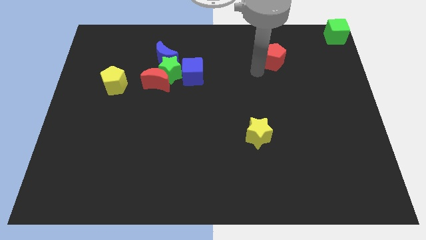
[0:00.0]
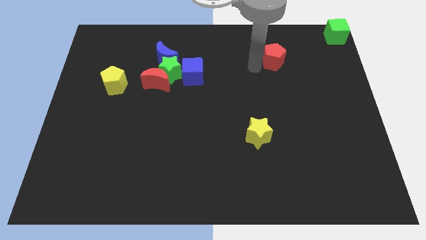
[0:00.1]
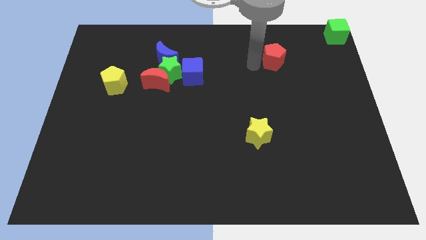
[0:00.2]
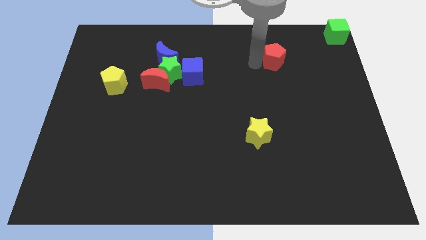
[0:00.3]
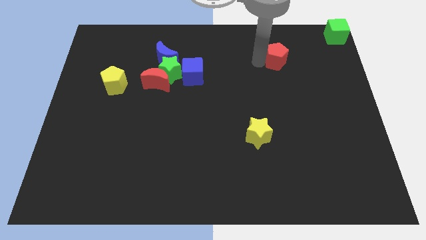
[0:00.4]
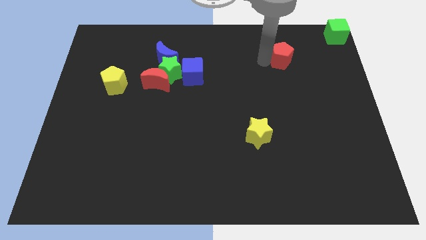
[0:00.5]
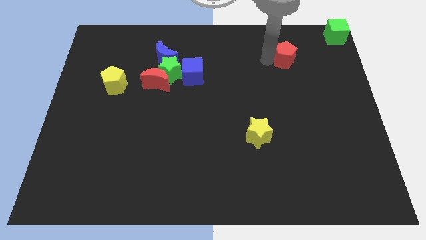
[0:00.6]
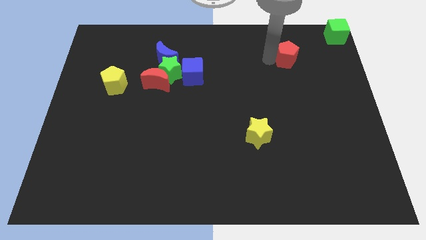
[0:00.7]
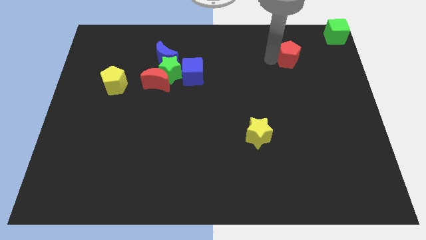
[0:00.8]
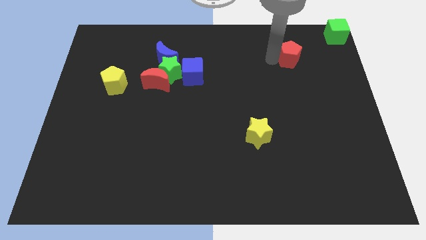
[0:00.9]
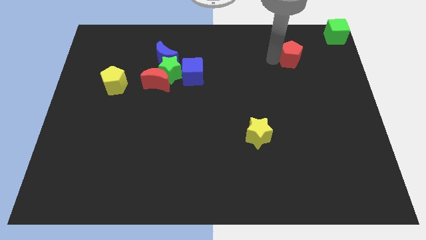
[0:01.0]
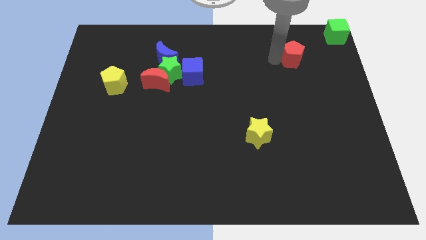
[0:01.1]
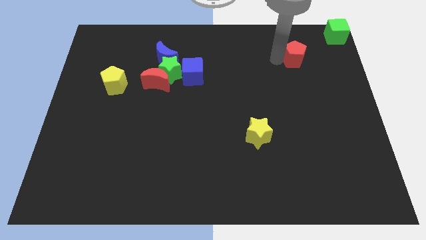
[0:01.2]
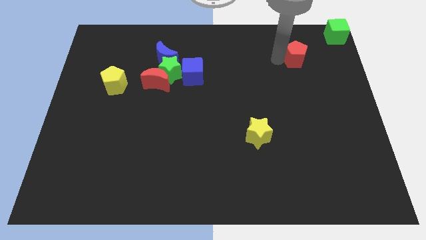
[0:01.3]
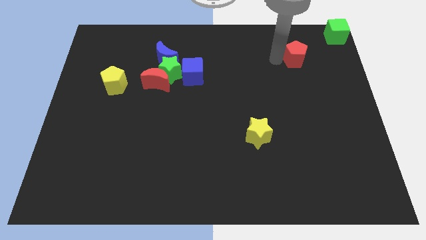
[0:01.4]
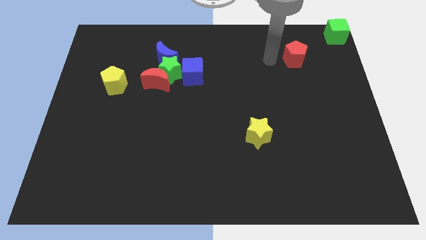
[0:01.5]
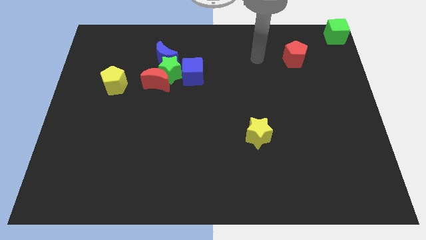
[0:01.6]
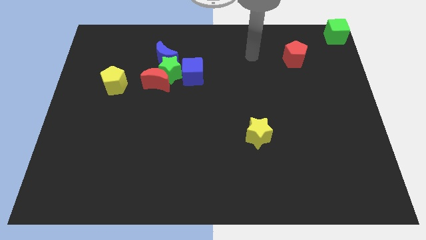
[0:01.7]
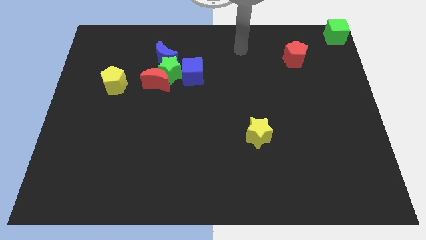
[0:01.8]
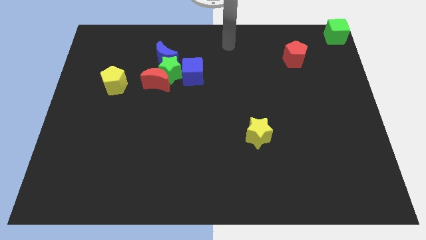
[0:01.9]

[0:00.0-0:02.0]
place the red pentagon diagonally to the green cube

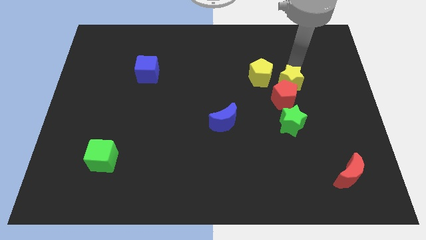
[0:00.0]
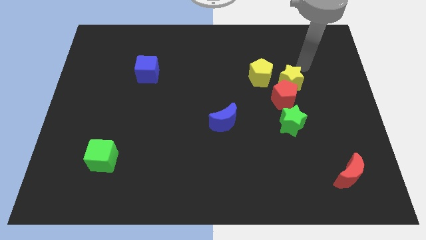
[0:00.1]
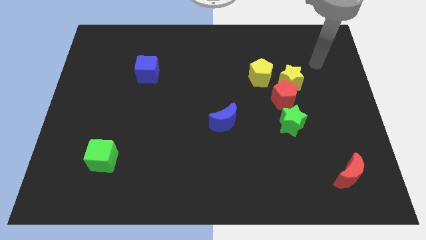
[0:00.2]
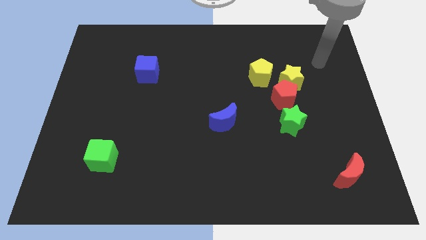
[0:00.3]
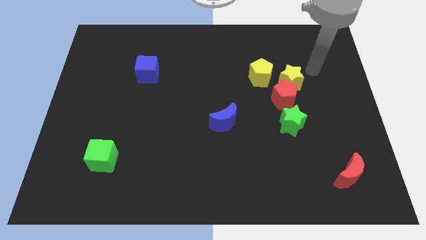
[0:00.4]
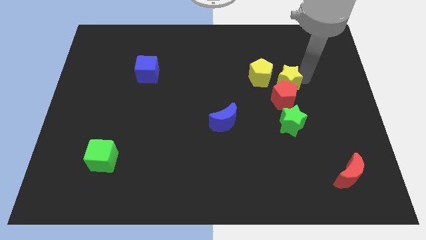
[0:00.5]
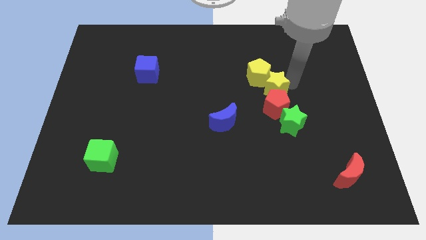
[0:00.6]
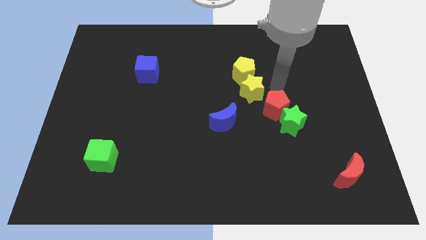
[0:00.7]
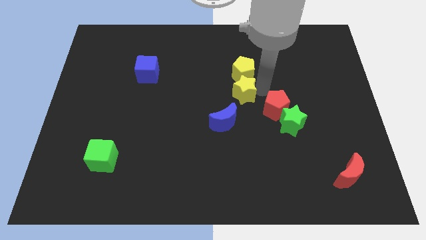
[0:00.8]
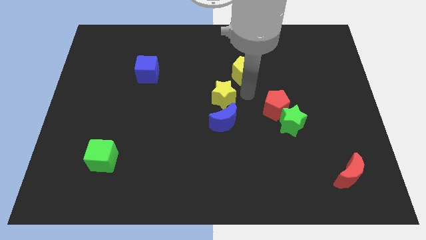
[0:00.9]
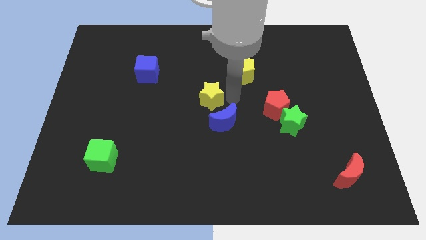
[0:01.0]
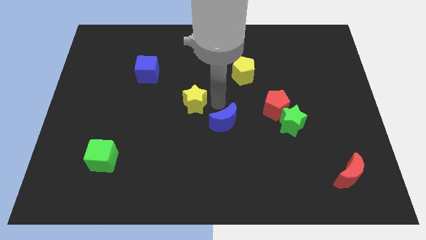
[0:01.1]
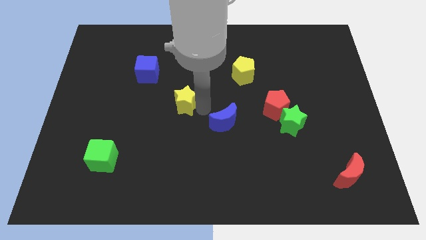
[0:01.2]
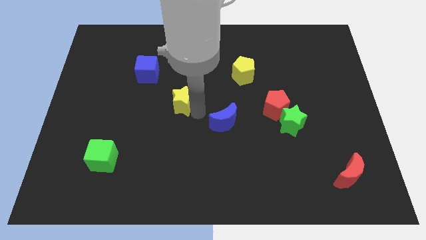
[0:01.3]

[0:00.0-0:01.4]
place the yellow star diagonally in between the blue cube and the blue moon

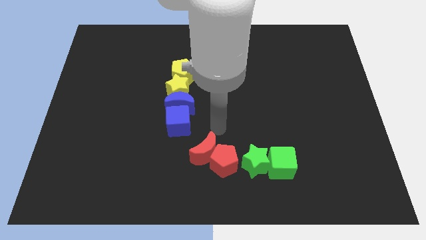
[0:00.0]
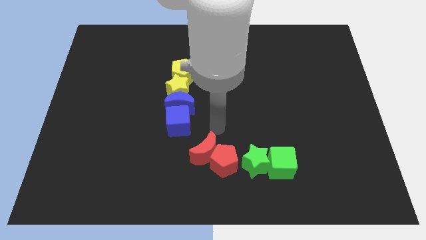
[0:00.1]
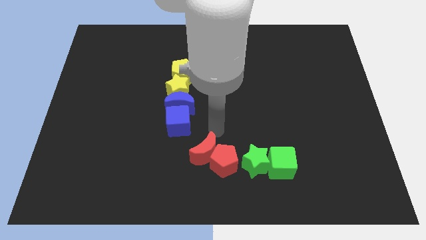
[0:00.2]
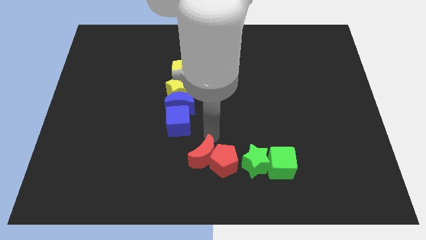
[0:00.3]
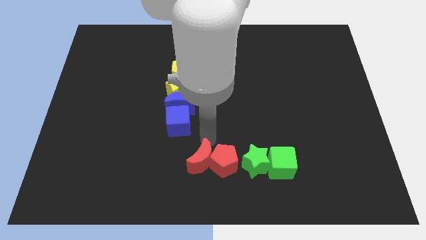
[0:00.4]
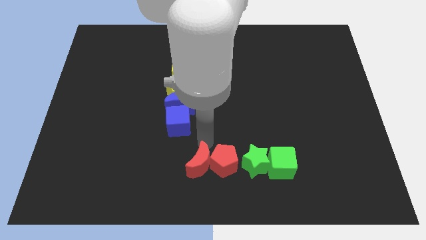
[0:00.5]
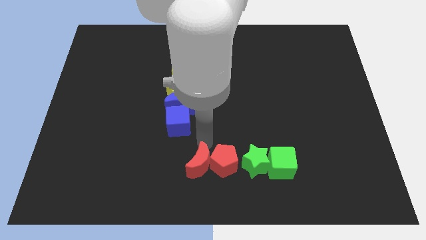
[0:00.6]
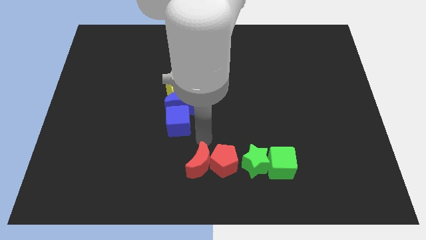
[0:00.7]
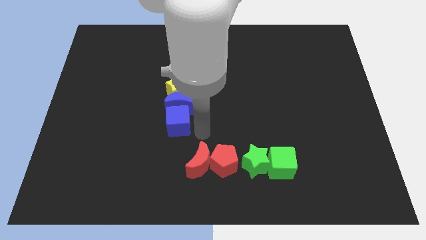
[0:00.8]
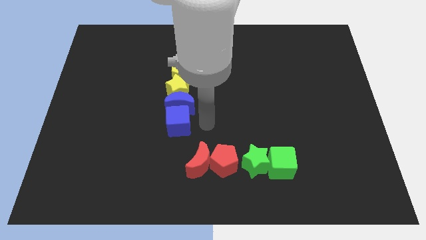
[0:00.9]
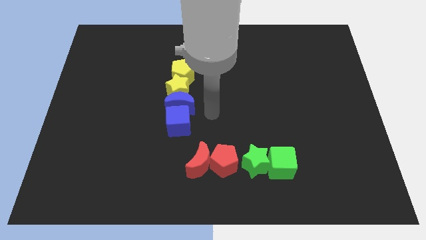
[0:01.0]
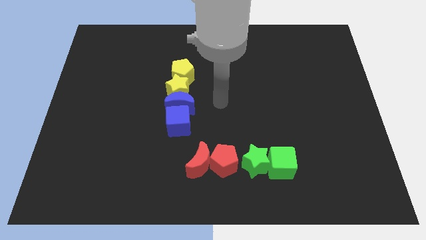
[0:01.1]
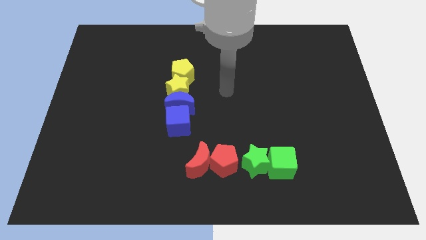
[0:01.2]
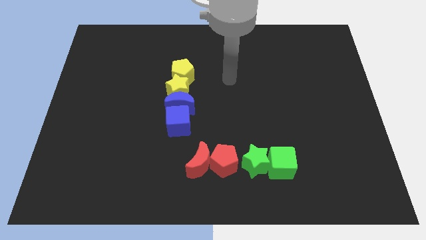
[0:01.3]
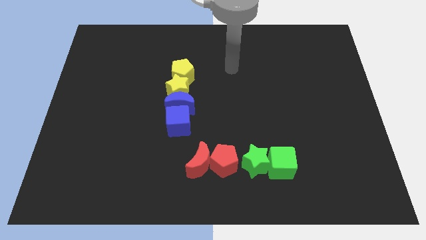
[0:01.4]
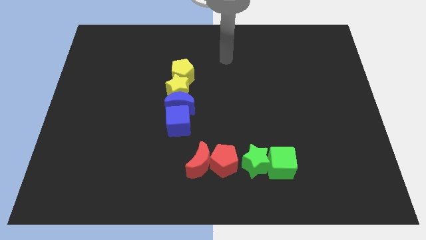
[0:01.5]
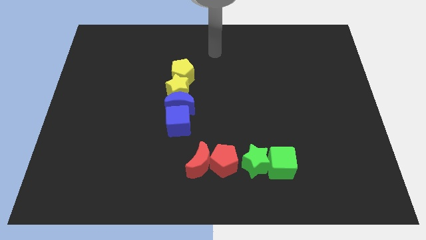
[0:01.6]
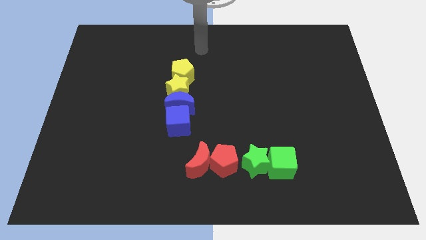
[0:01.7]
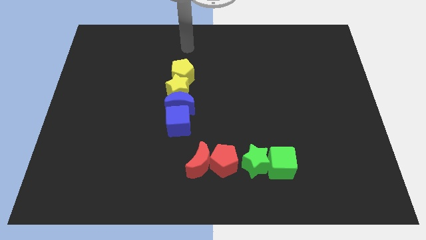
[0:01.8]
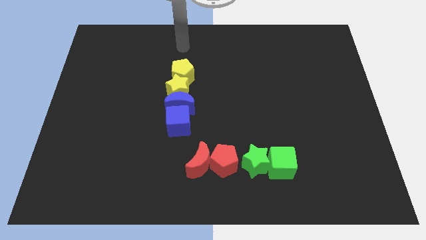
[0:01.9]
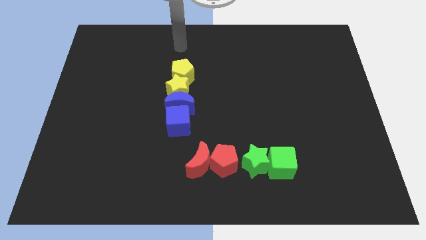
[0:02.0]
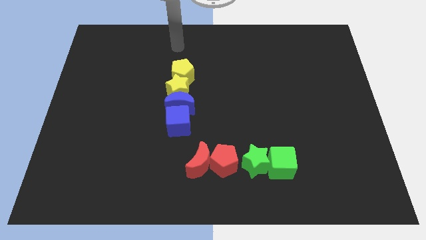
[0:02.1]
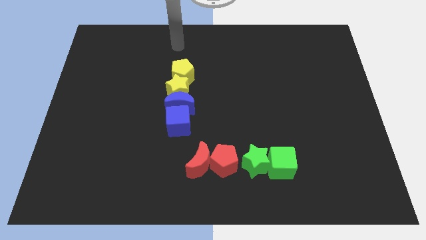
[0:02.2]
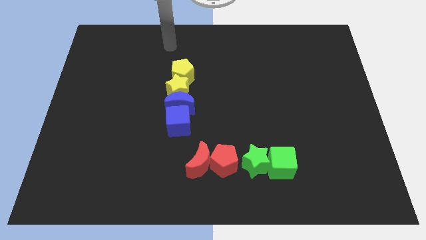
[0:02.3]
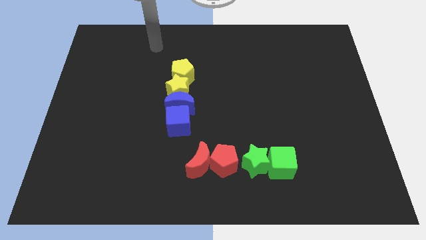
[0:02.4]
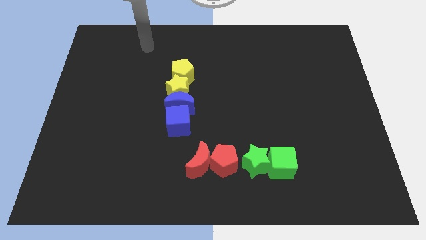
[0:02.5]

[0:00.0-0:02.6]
push red moon beside red pentagon

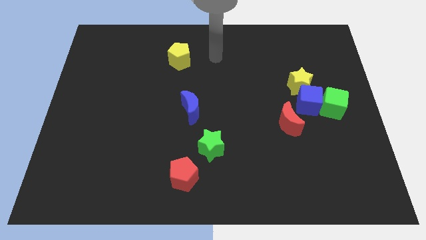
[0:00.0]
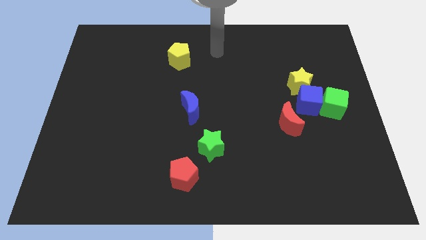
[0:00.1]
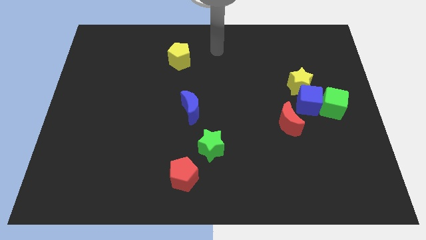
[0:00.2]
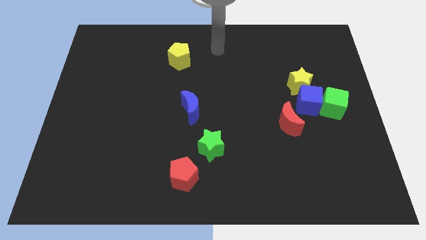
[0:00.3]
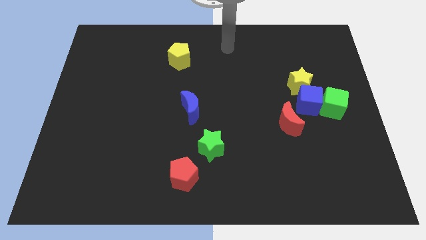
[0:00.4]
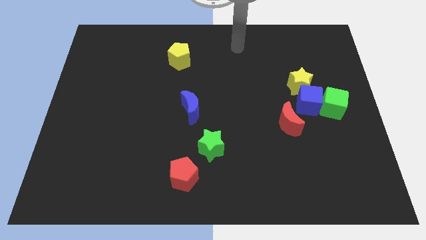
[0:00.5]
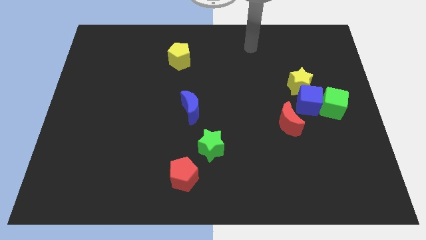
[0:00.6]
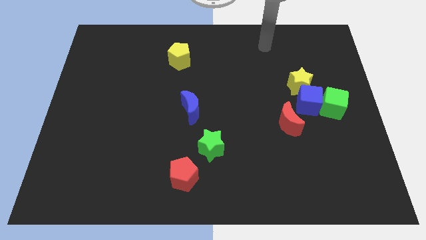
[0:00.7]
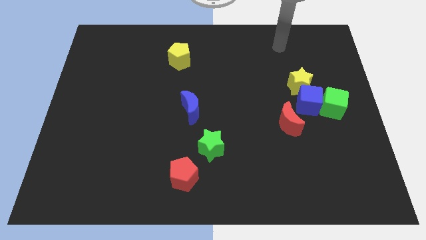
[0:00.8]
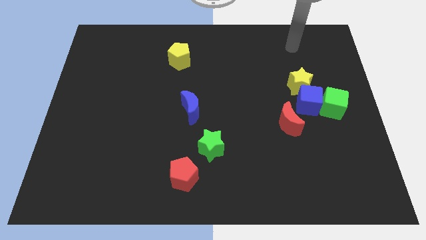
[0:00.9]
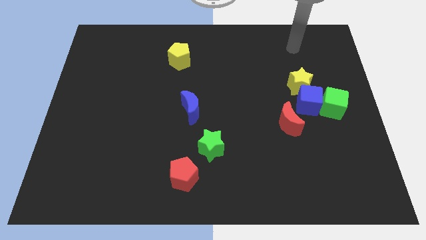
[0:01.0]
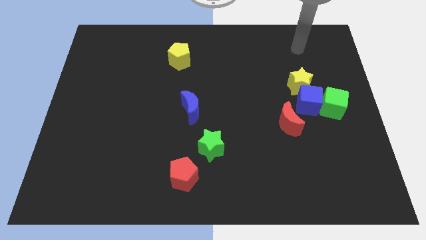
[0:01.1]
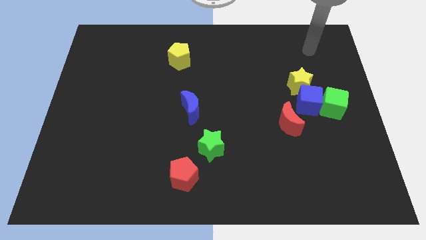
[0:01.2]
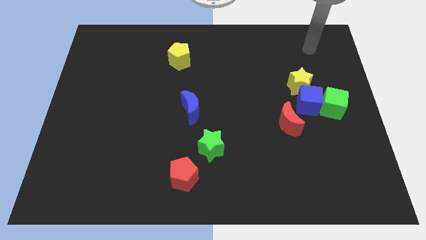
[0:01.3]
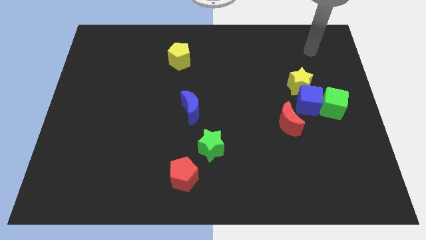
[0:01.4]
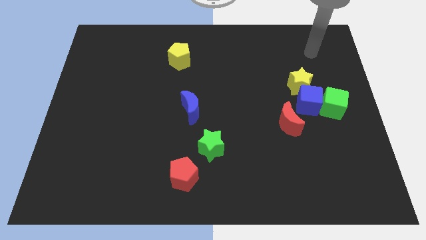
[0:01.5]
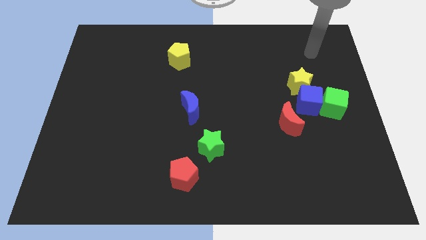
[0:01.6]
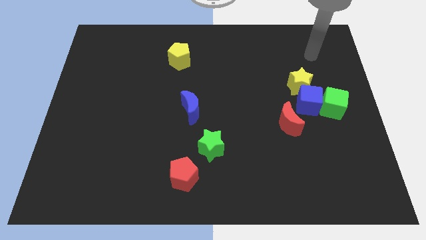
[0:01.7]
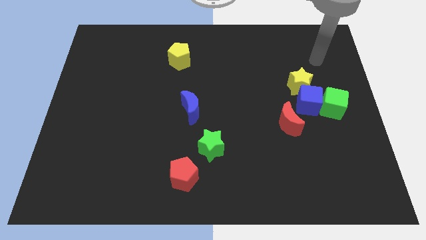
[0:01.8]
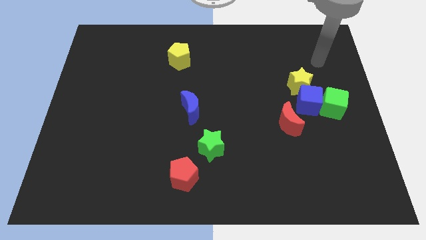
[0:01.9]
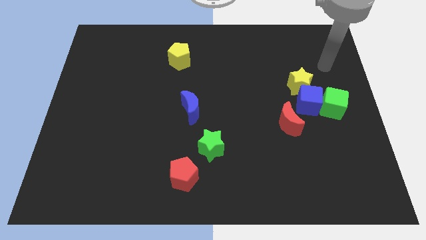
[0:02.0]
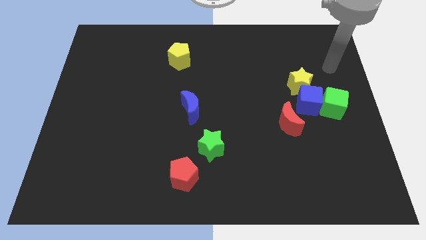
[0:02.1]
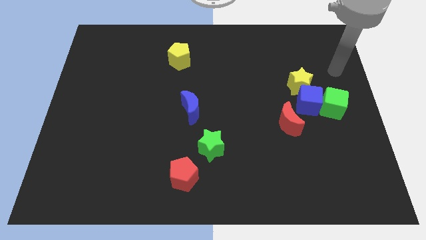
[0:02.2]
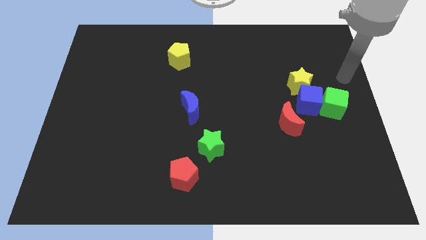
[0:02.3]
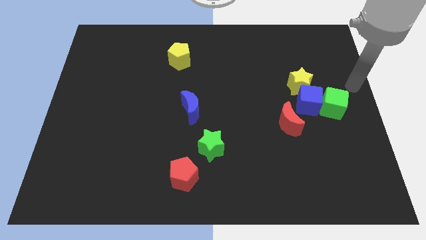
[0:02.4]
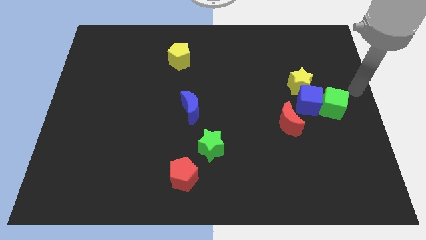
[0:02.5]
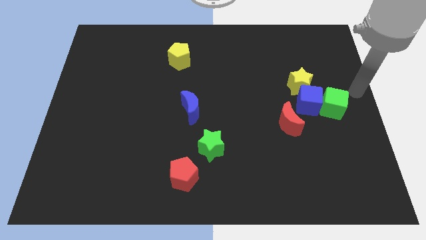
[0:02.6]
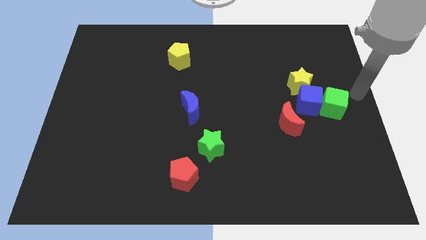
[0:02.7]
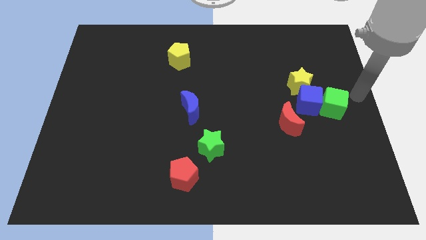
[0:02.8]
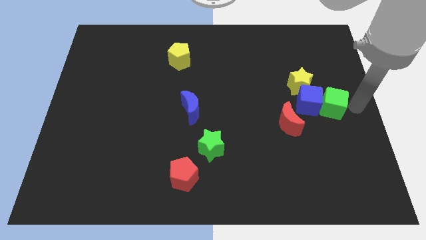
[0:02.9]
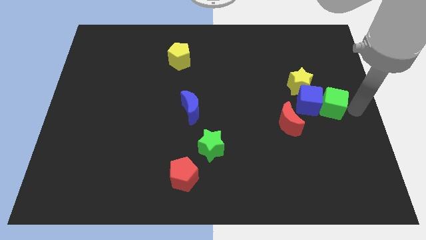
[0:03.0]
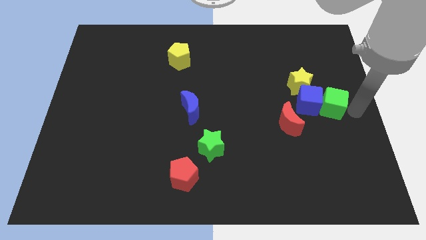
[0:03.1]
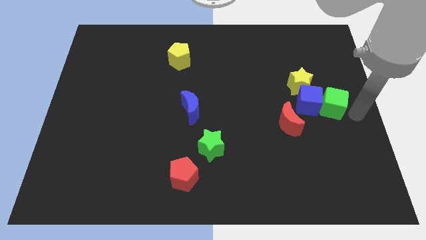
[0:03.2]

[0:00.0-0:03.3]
move arm towards right to the green cube
